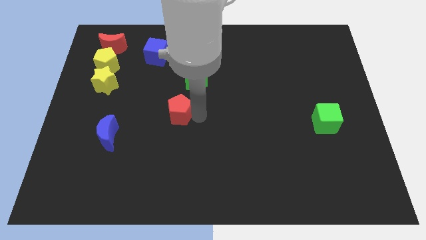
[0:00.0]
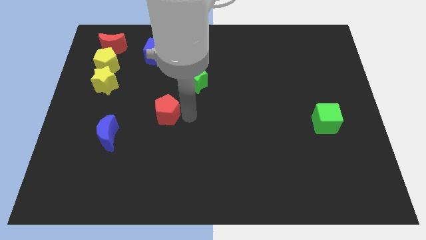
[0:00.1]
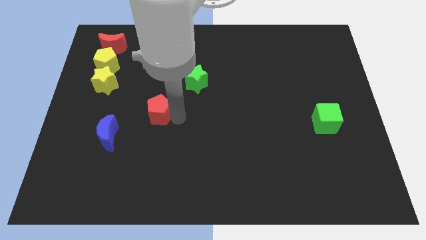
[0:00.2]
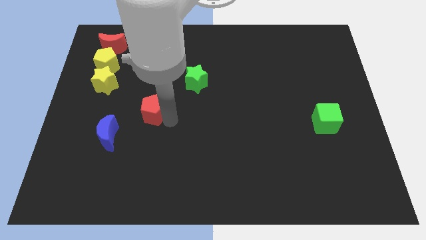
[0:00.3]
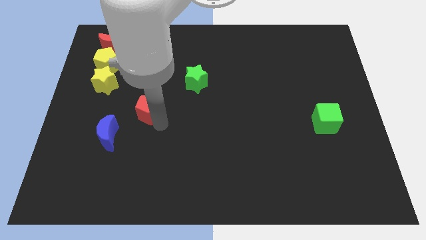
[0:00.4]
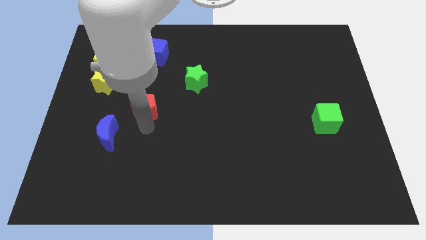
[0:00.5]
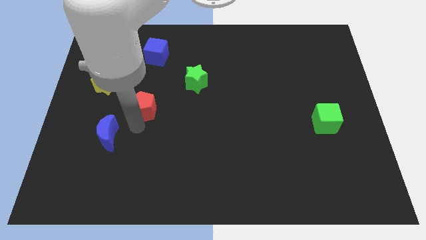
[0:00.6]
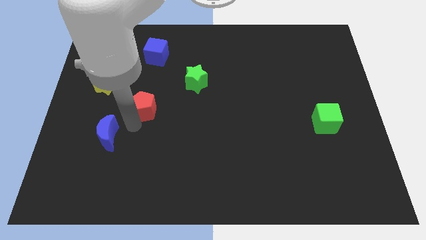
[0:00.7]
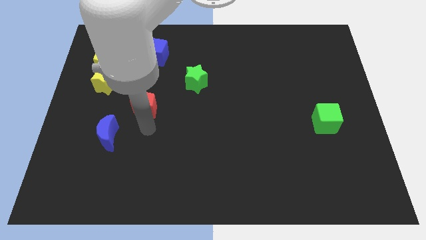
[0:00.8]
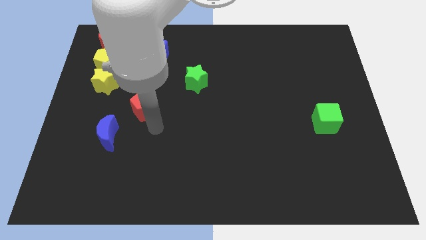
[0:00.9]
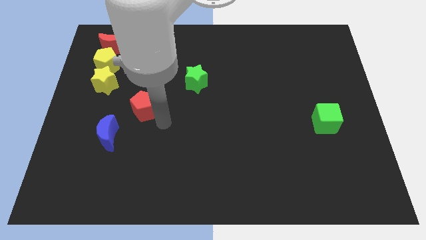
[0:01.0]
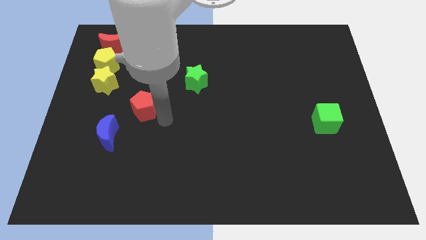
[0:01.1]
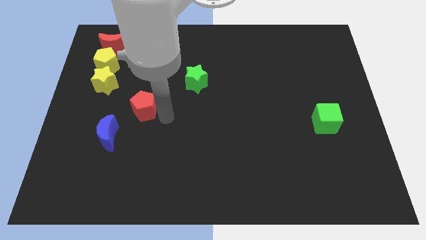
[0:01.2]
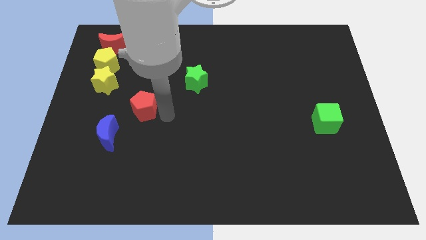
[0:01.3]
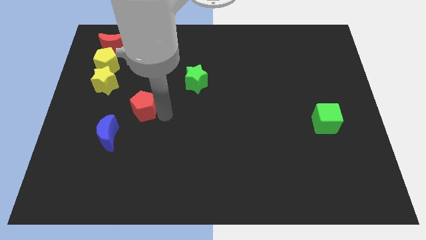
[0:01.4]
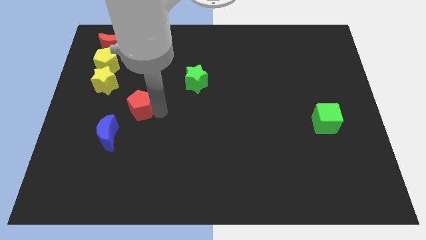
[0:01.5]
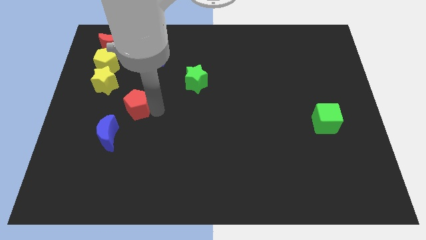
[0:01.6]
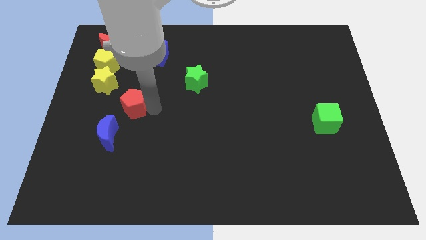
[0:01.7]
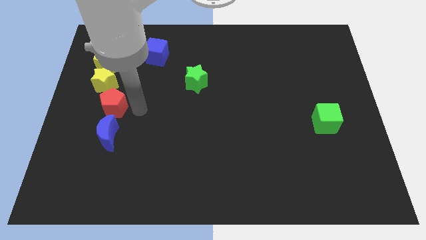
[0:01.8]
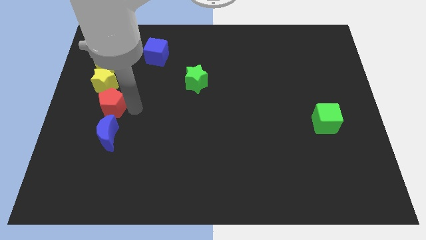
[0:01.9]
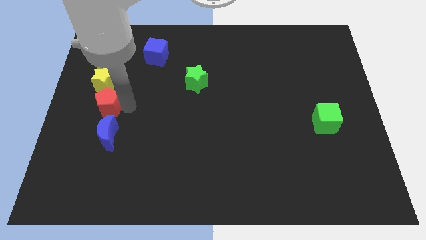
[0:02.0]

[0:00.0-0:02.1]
slide the red pentagon to the top of the blue moon

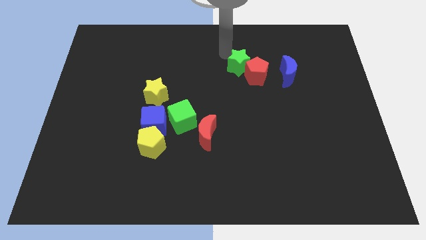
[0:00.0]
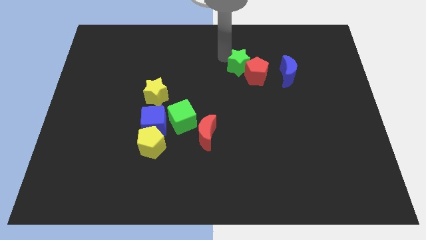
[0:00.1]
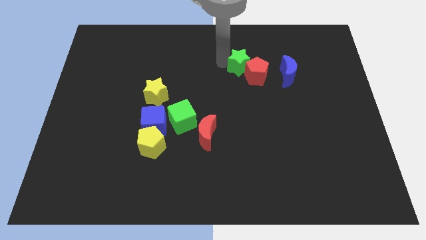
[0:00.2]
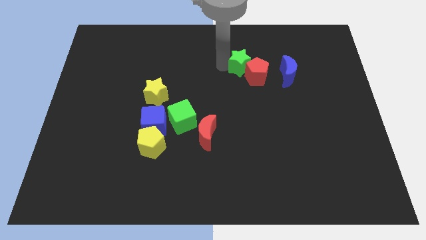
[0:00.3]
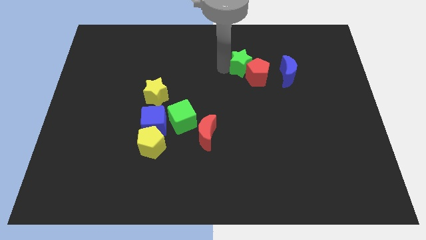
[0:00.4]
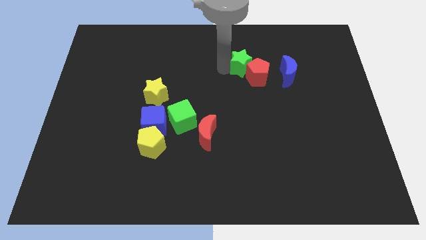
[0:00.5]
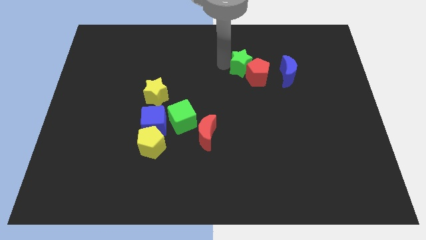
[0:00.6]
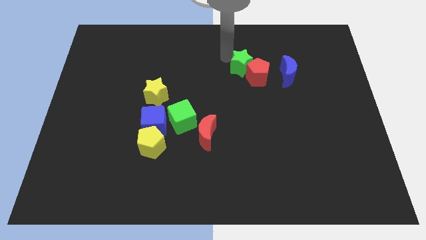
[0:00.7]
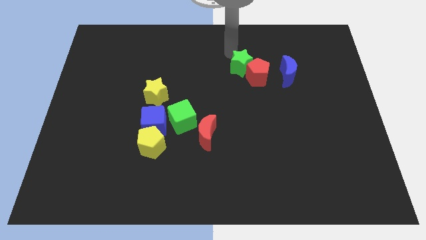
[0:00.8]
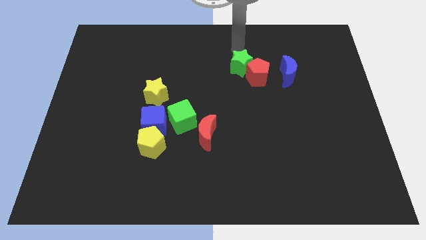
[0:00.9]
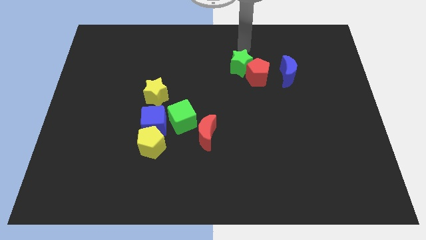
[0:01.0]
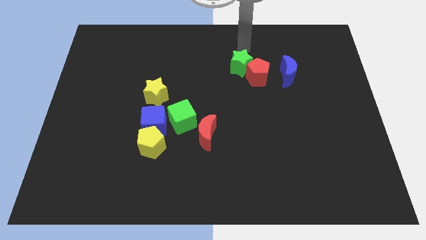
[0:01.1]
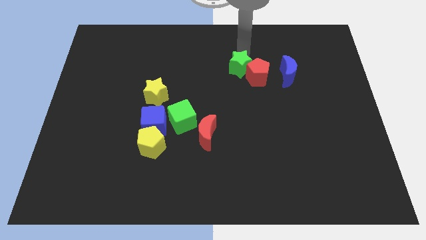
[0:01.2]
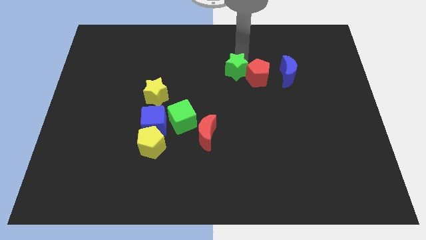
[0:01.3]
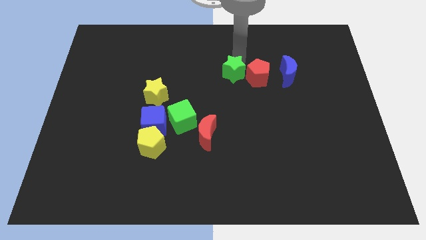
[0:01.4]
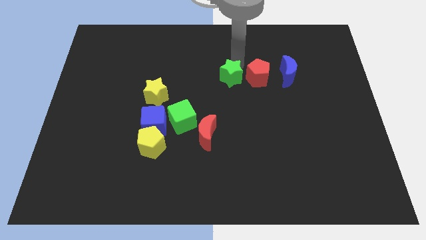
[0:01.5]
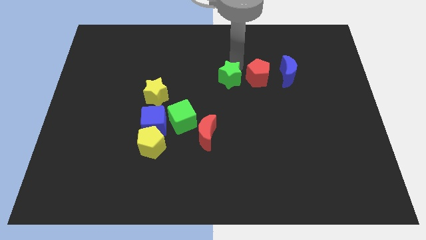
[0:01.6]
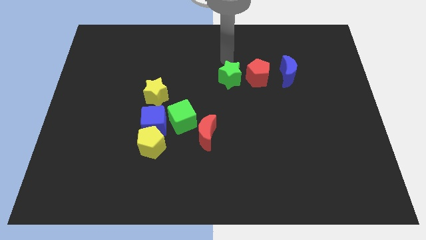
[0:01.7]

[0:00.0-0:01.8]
place the green star parallel left to the red pentagon

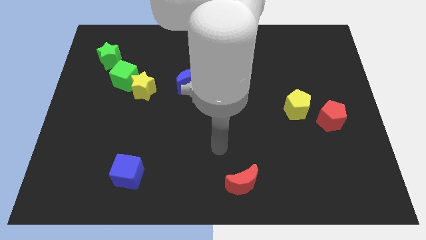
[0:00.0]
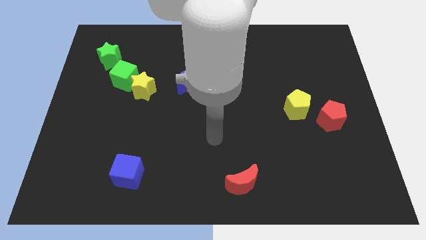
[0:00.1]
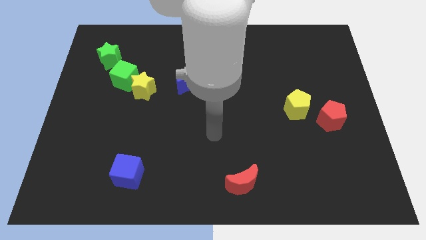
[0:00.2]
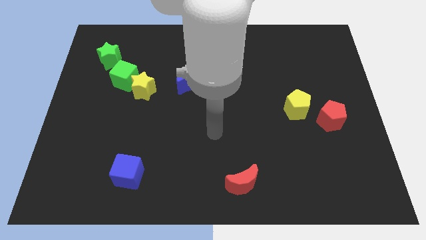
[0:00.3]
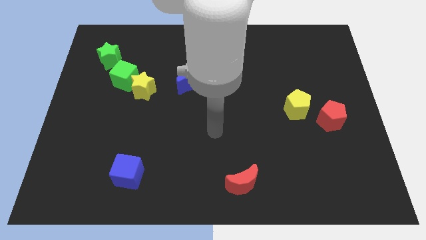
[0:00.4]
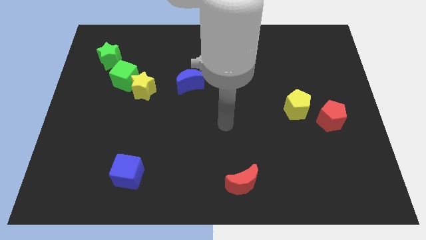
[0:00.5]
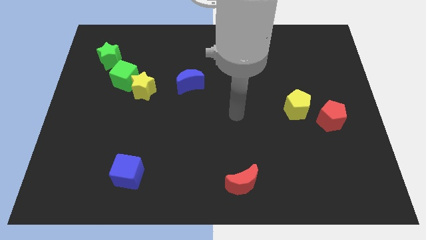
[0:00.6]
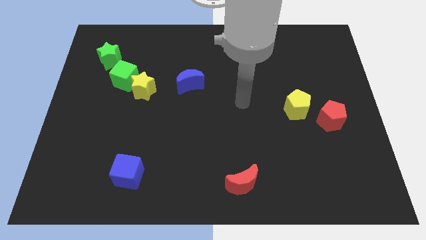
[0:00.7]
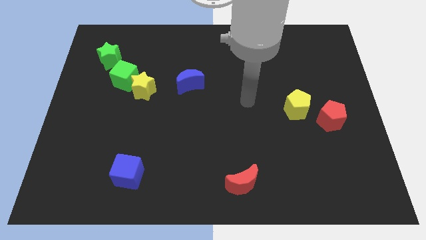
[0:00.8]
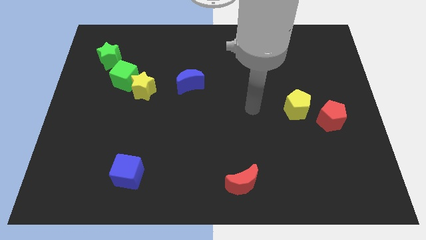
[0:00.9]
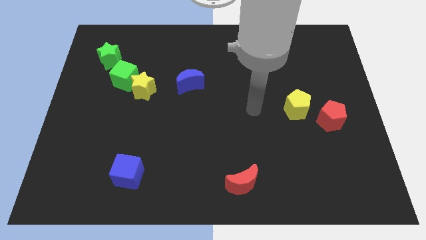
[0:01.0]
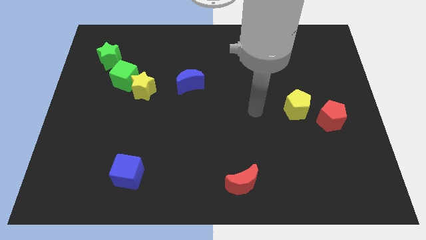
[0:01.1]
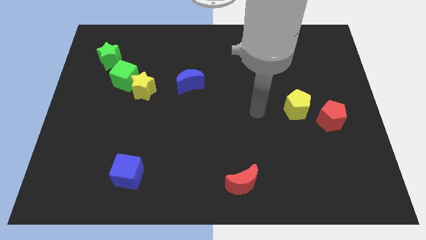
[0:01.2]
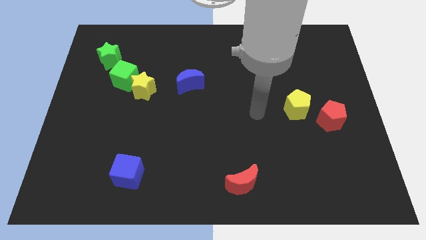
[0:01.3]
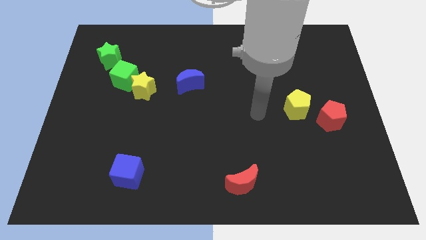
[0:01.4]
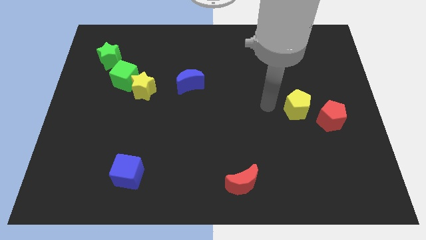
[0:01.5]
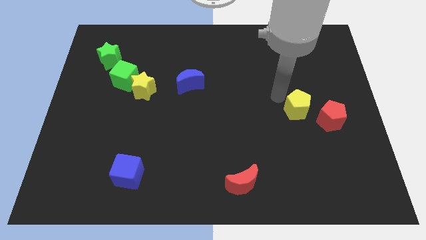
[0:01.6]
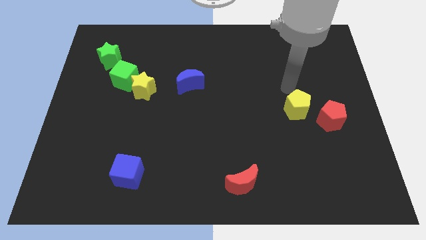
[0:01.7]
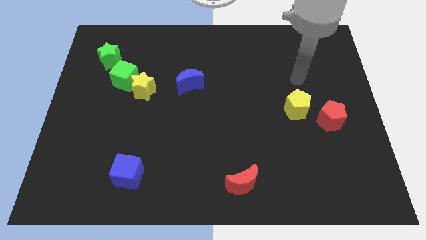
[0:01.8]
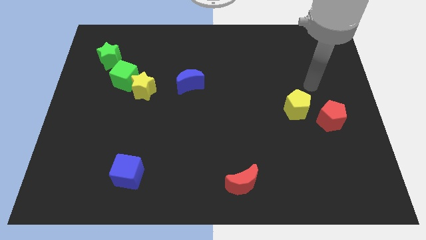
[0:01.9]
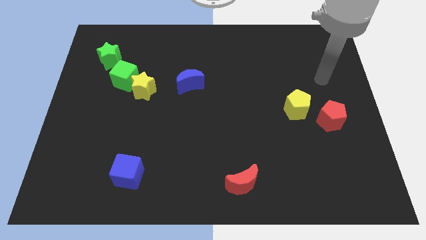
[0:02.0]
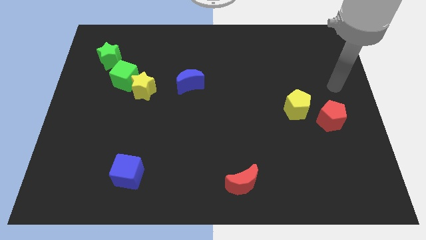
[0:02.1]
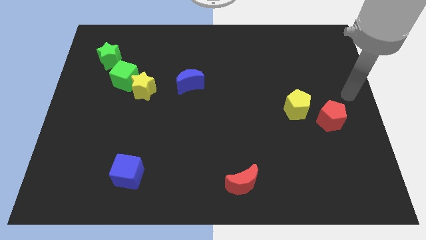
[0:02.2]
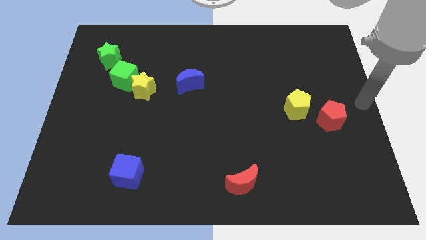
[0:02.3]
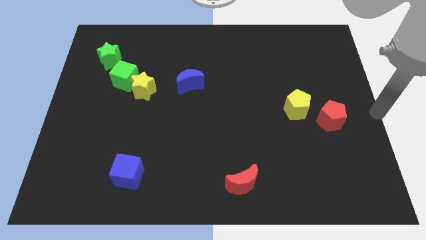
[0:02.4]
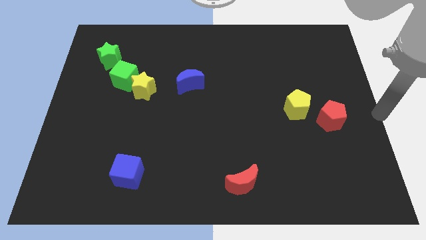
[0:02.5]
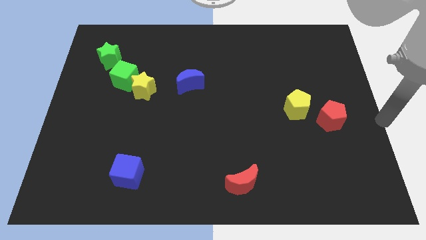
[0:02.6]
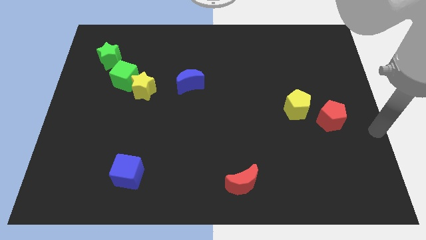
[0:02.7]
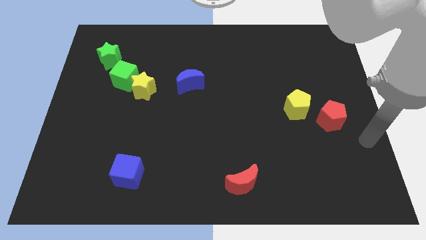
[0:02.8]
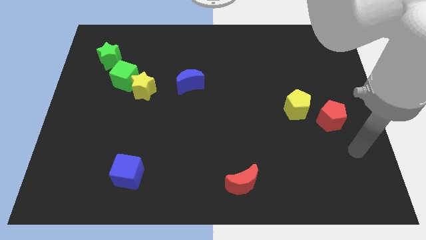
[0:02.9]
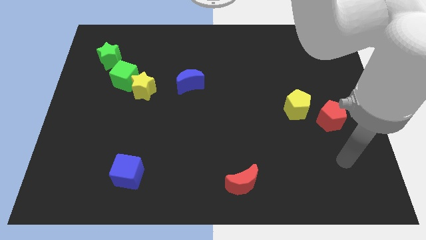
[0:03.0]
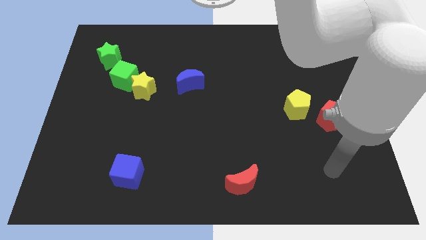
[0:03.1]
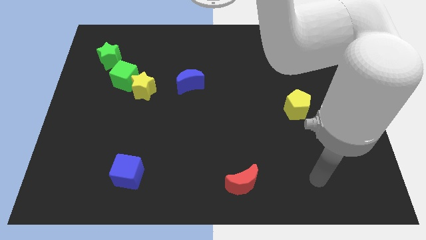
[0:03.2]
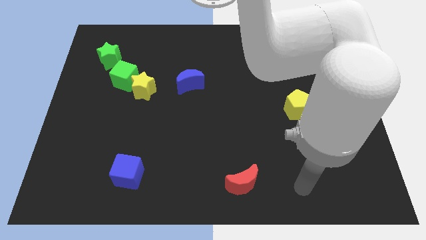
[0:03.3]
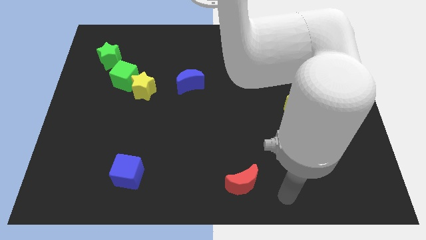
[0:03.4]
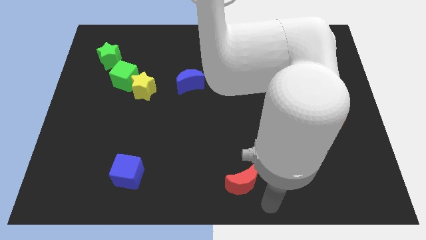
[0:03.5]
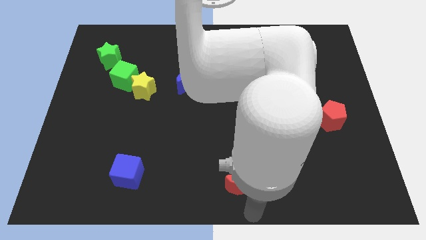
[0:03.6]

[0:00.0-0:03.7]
point your arm at the bottom of the red moon

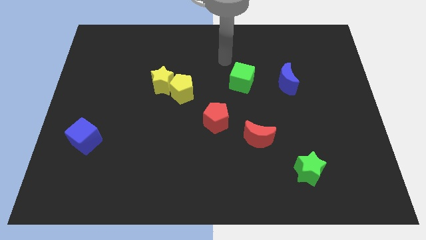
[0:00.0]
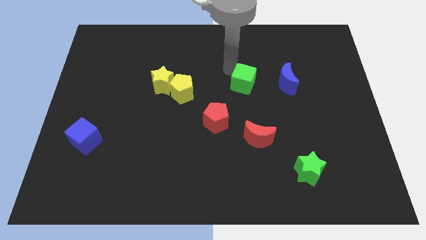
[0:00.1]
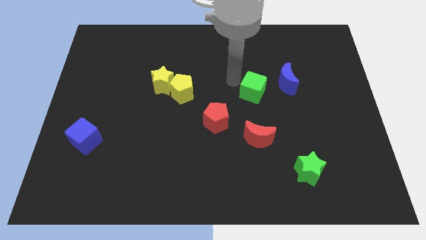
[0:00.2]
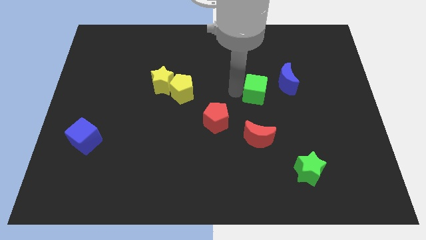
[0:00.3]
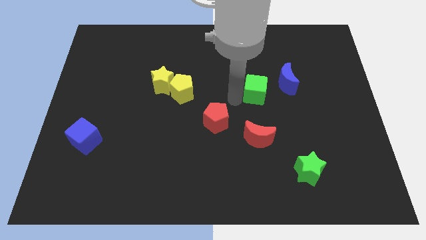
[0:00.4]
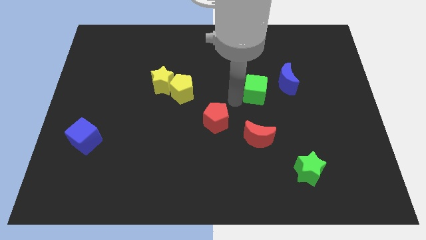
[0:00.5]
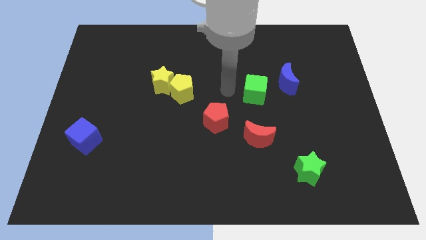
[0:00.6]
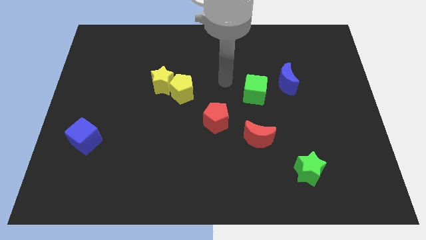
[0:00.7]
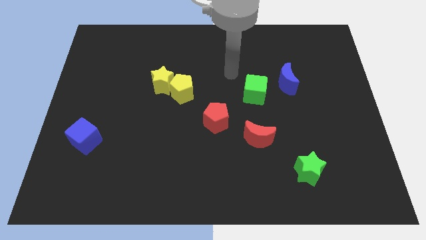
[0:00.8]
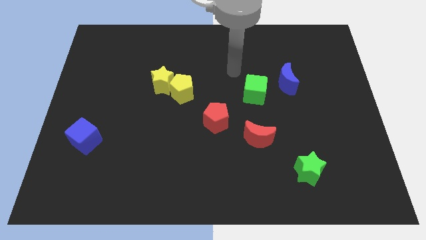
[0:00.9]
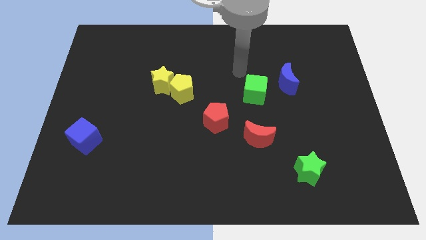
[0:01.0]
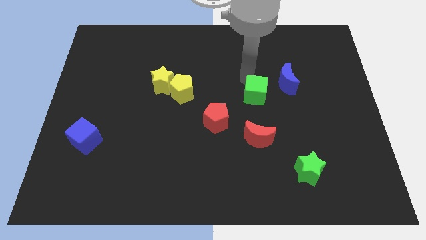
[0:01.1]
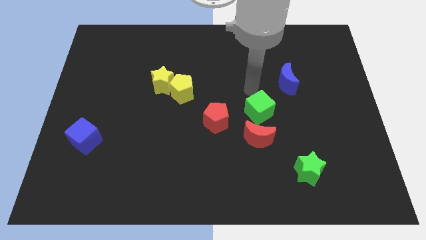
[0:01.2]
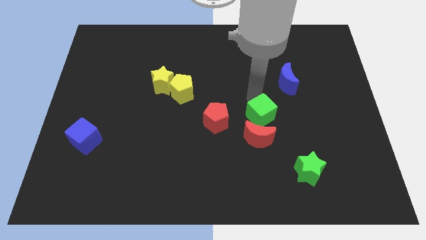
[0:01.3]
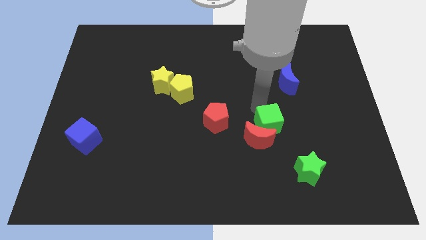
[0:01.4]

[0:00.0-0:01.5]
drag the green cube into the red crescent
